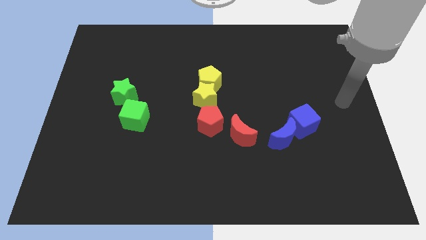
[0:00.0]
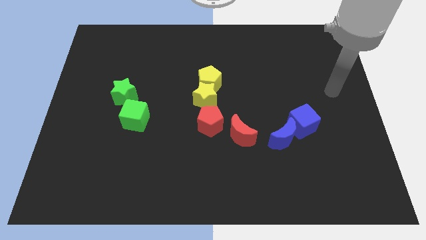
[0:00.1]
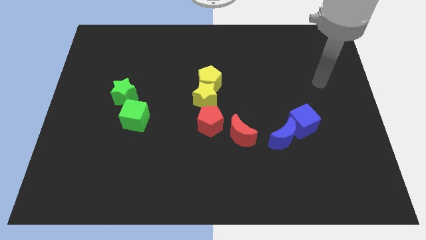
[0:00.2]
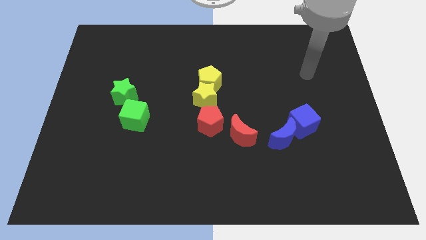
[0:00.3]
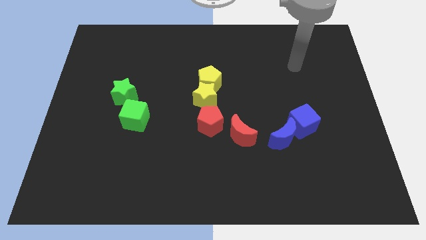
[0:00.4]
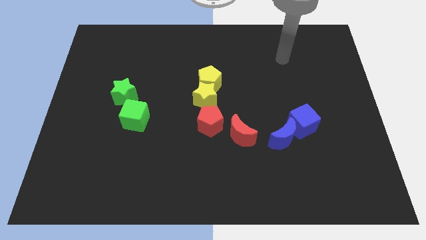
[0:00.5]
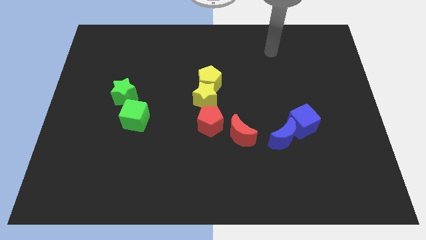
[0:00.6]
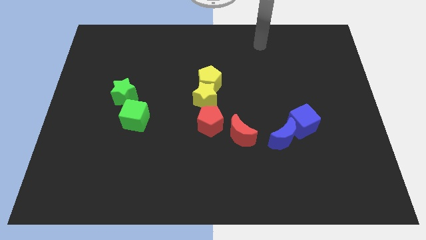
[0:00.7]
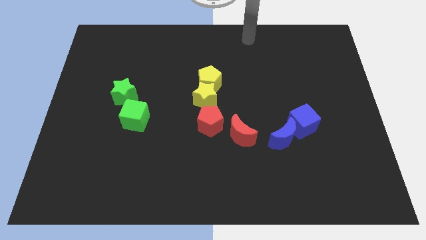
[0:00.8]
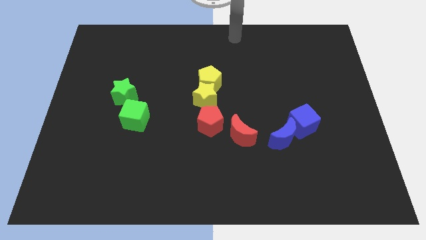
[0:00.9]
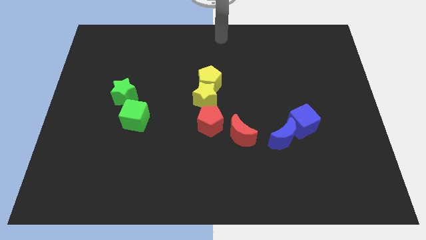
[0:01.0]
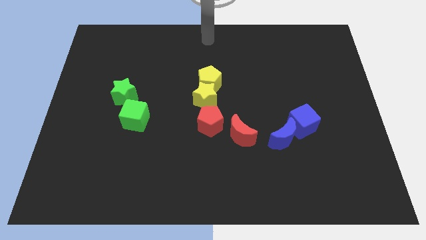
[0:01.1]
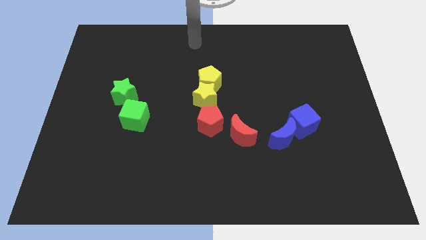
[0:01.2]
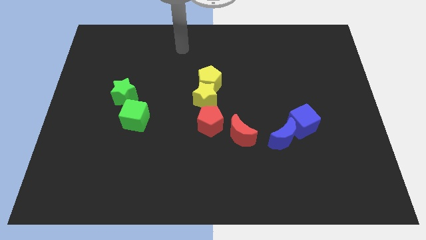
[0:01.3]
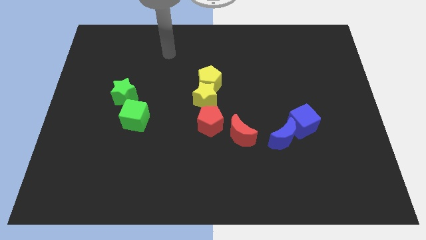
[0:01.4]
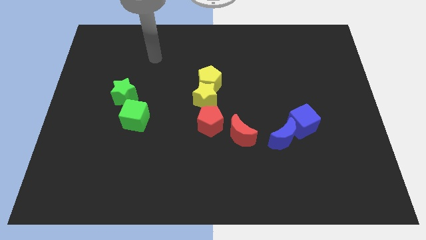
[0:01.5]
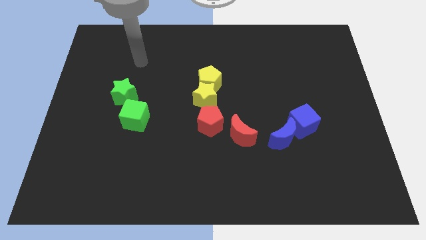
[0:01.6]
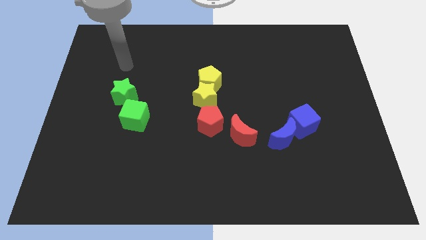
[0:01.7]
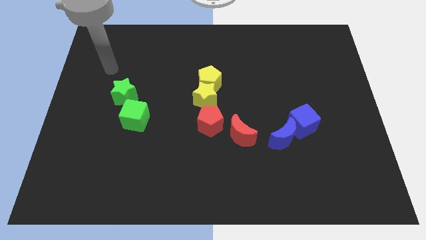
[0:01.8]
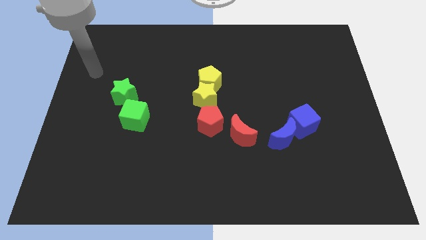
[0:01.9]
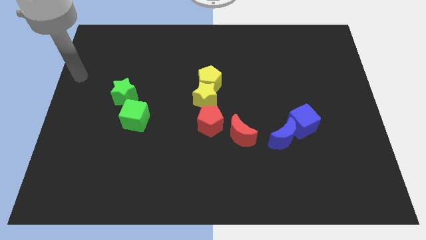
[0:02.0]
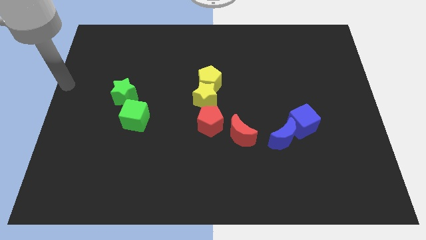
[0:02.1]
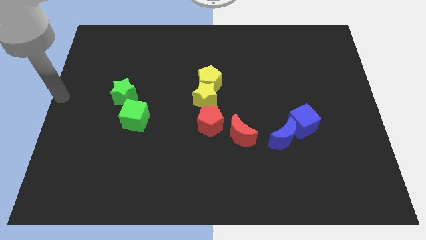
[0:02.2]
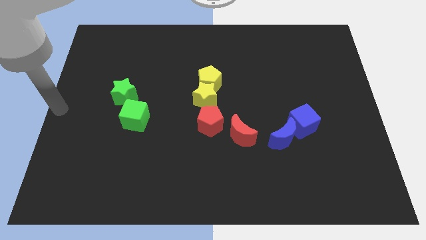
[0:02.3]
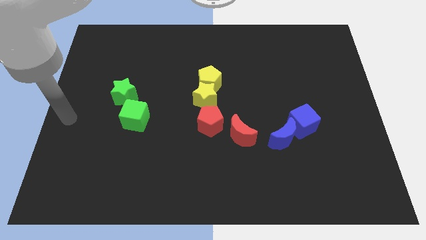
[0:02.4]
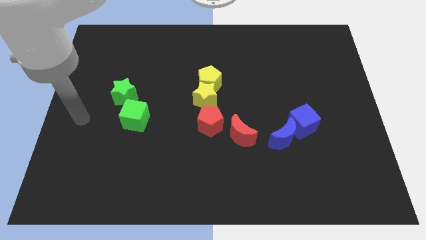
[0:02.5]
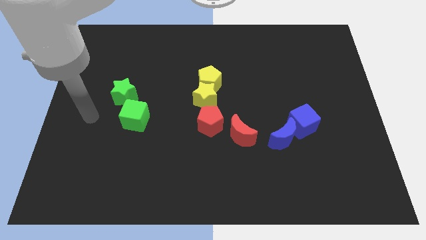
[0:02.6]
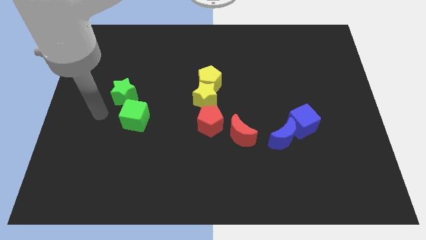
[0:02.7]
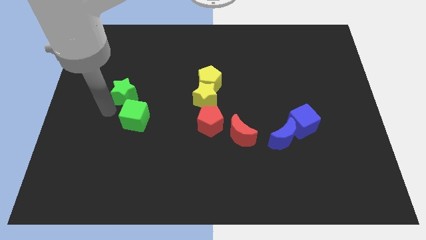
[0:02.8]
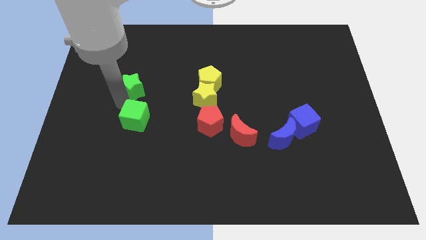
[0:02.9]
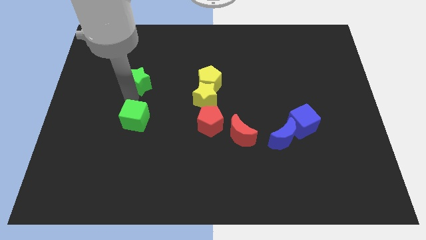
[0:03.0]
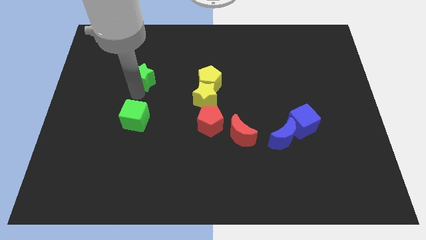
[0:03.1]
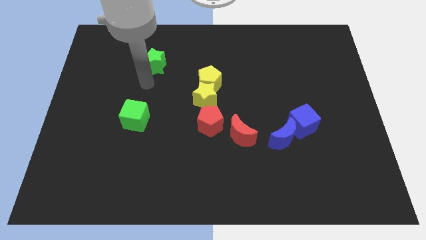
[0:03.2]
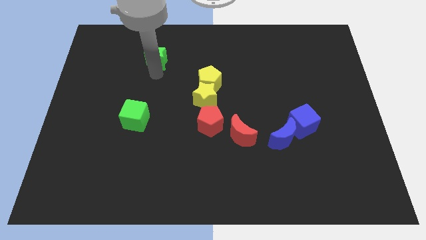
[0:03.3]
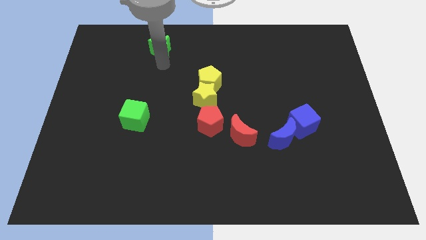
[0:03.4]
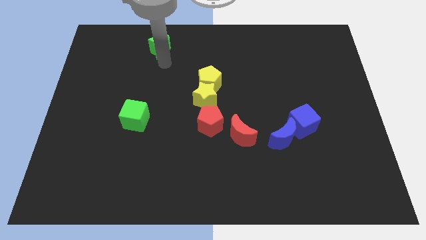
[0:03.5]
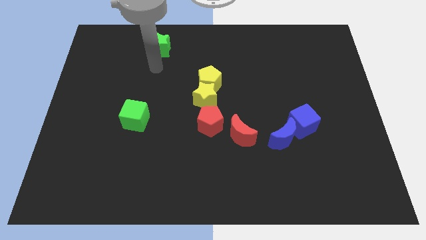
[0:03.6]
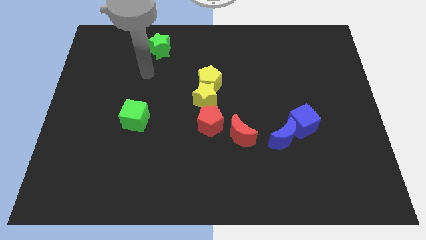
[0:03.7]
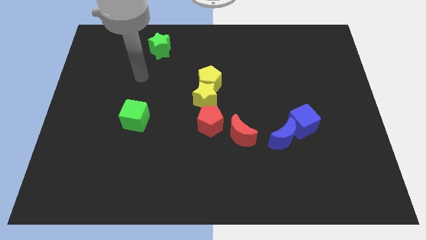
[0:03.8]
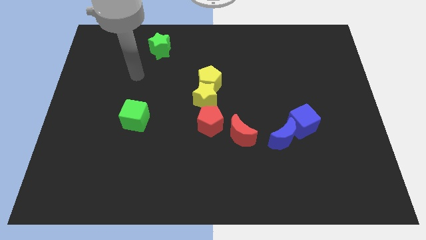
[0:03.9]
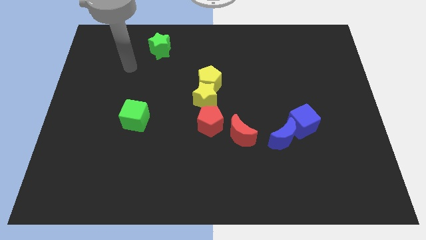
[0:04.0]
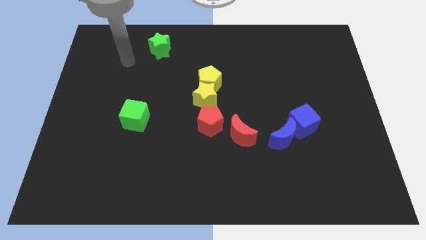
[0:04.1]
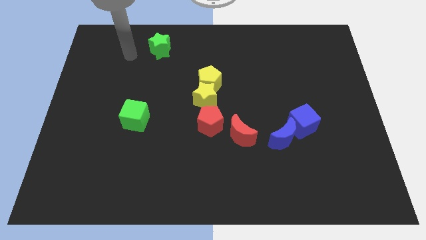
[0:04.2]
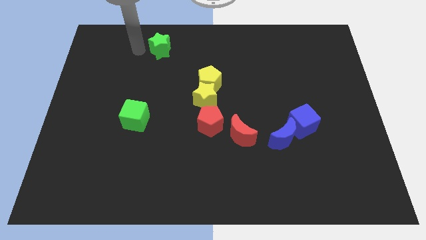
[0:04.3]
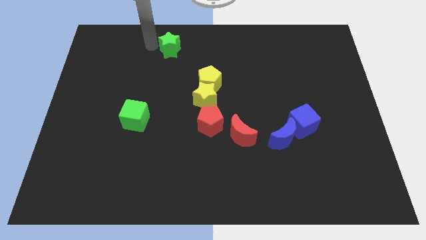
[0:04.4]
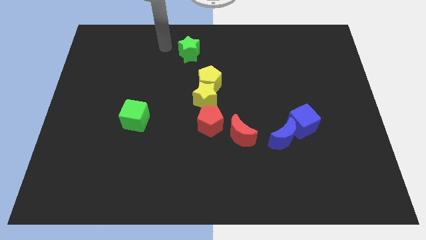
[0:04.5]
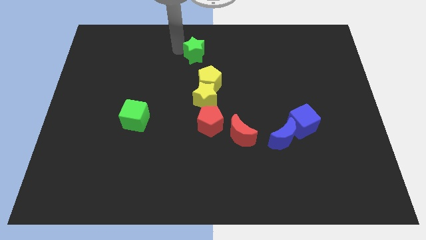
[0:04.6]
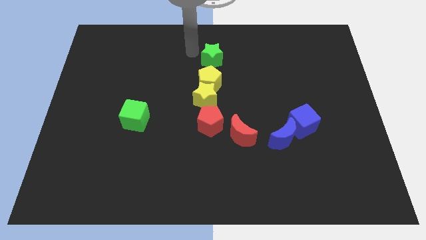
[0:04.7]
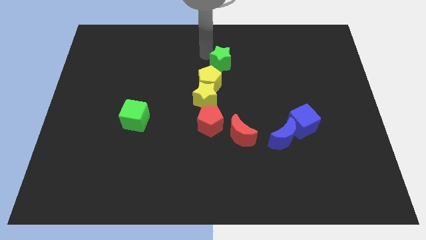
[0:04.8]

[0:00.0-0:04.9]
move the green star to the top of the yellow pentagon

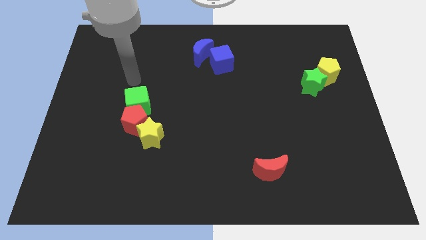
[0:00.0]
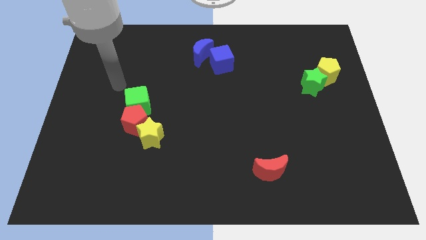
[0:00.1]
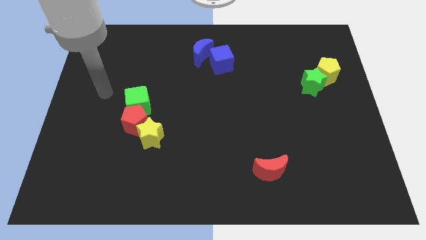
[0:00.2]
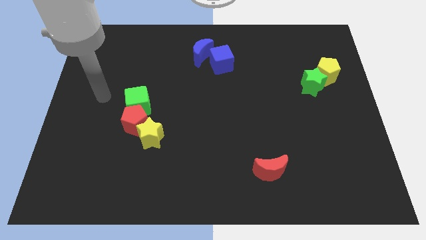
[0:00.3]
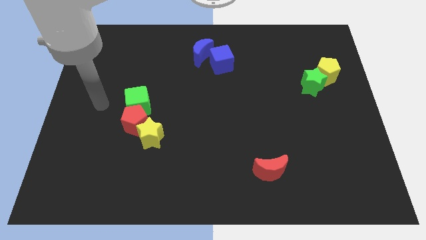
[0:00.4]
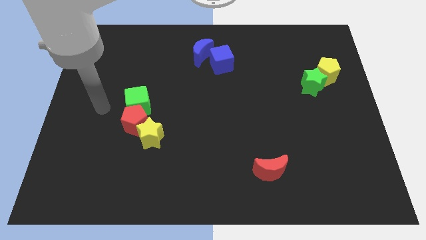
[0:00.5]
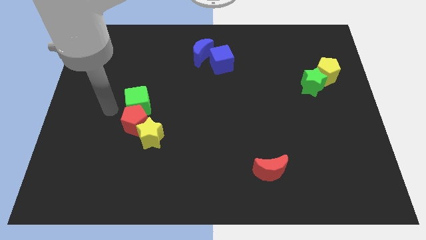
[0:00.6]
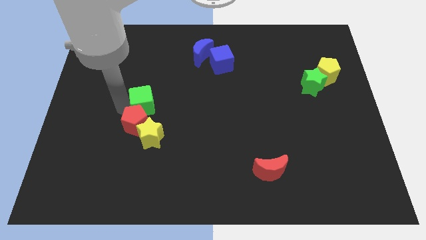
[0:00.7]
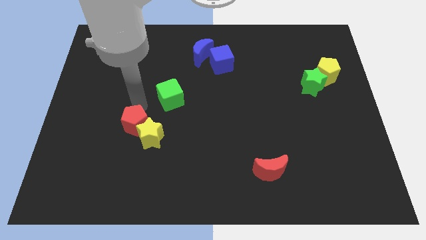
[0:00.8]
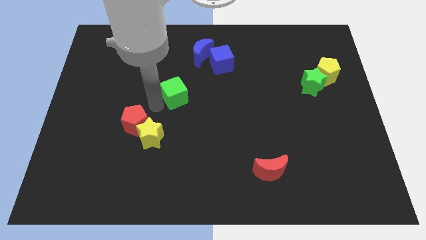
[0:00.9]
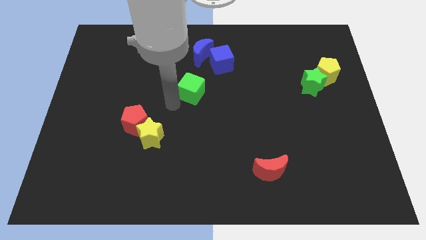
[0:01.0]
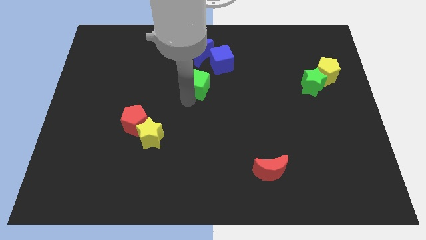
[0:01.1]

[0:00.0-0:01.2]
separate the green cube from the red pentagon

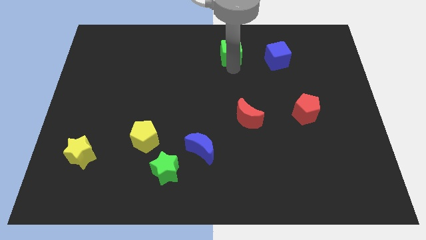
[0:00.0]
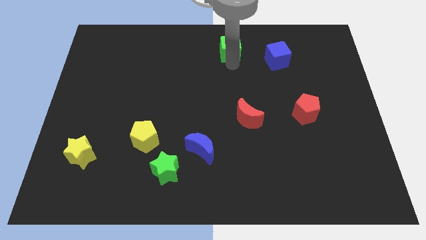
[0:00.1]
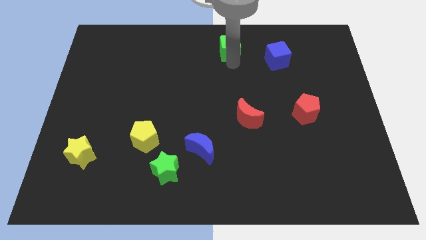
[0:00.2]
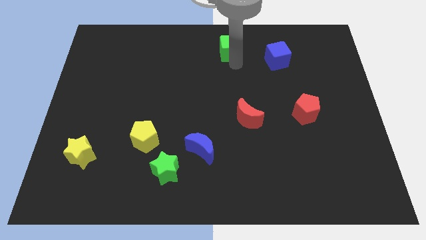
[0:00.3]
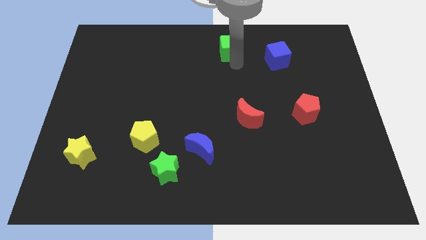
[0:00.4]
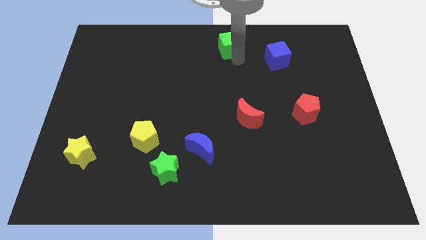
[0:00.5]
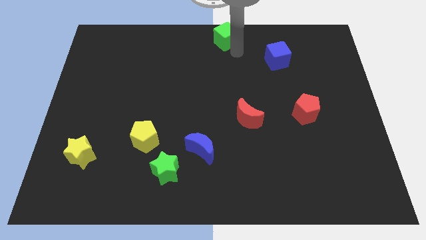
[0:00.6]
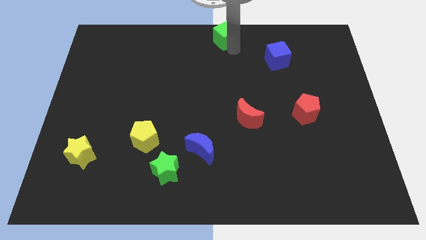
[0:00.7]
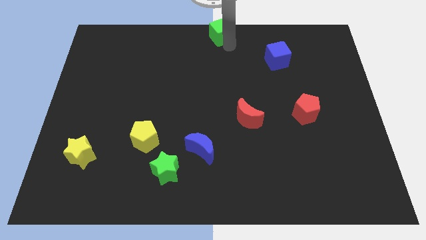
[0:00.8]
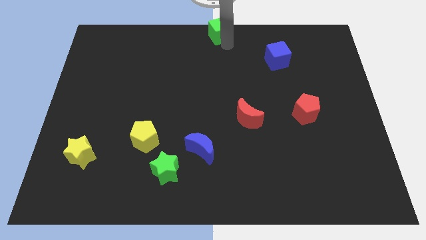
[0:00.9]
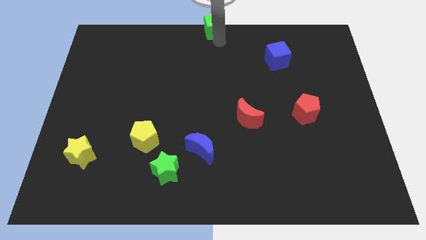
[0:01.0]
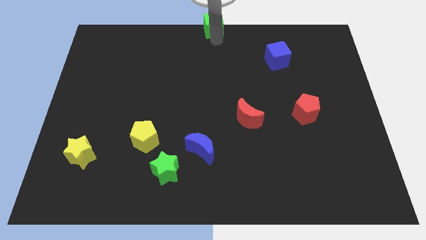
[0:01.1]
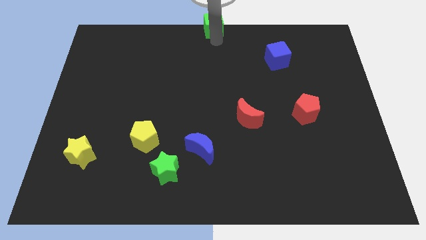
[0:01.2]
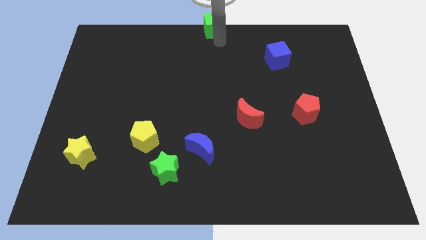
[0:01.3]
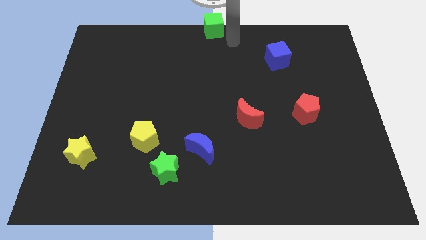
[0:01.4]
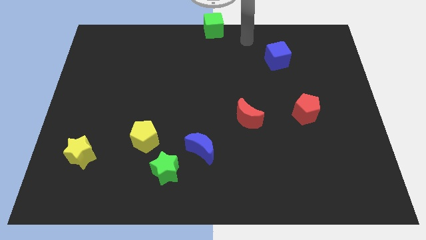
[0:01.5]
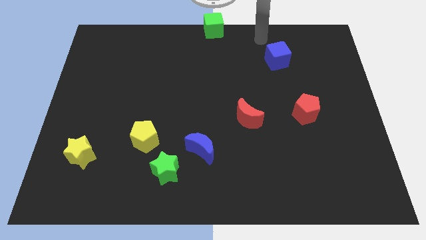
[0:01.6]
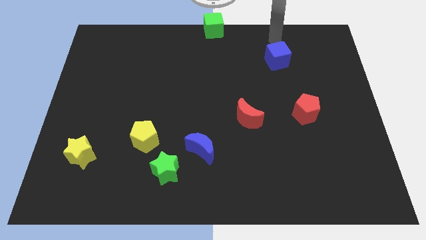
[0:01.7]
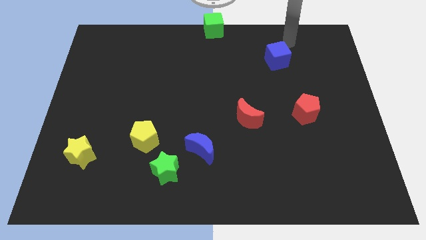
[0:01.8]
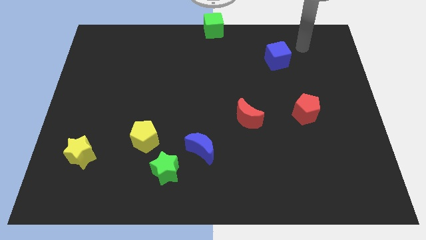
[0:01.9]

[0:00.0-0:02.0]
place the green cube at the top center

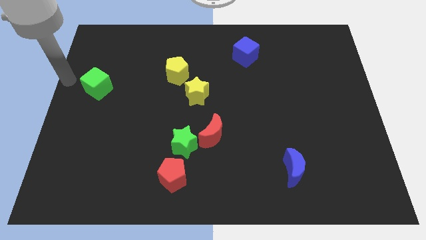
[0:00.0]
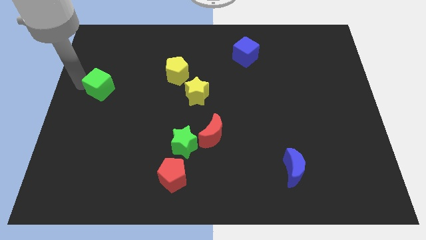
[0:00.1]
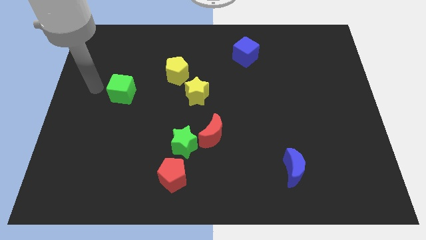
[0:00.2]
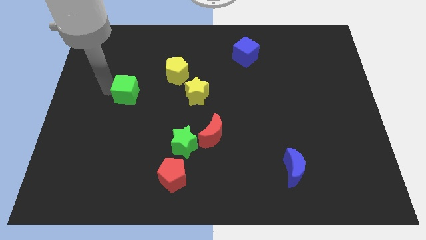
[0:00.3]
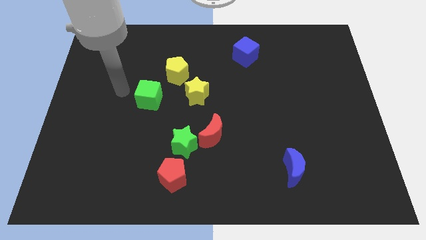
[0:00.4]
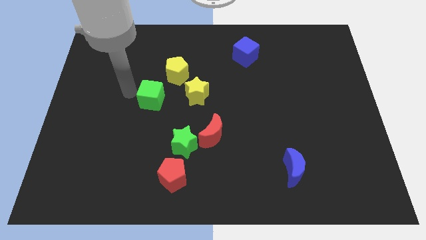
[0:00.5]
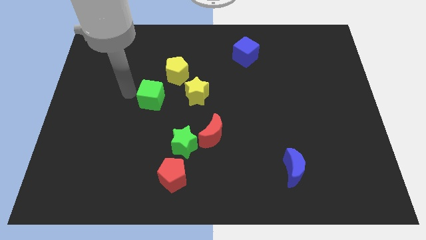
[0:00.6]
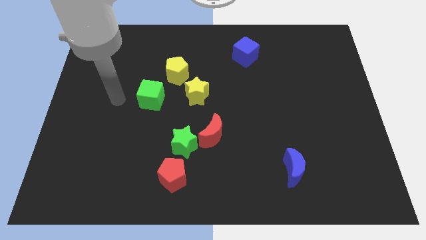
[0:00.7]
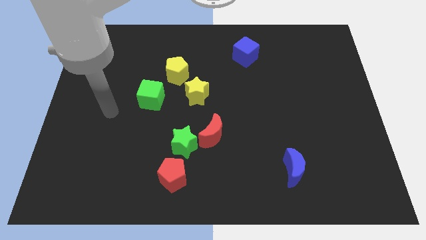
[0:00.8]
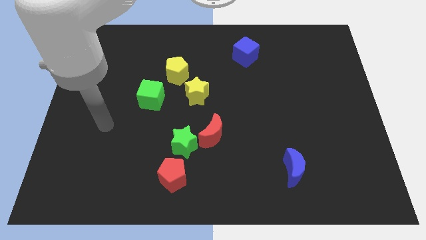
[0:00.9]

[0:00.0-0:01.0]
put the green cube to the left of the yellow star

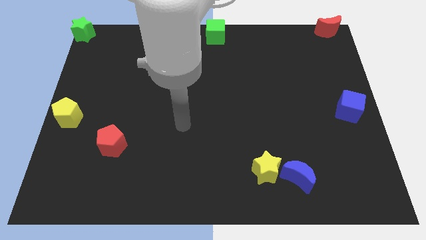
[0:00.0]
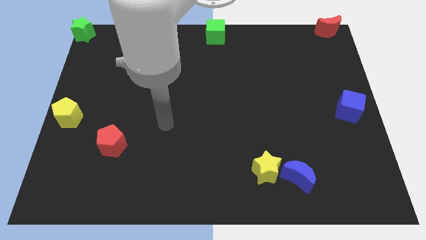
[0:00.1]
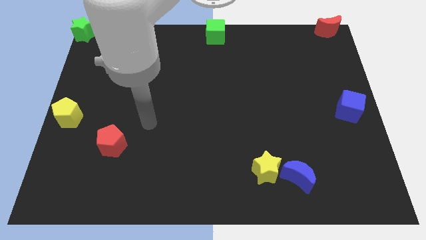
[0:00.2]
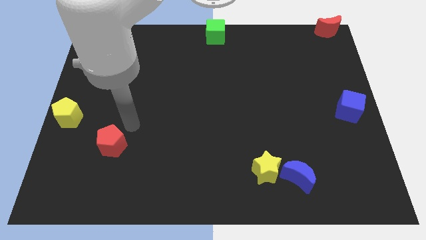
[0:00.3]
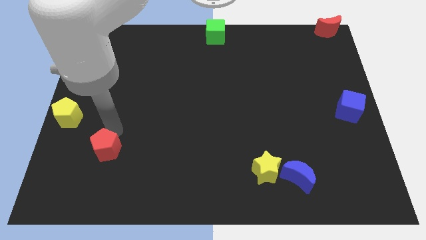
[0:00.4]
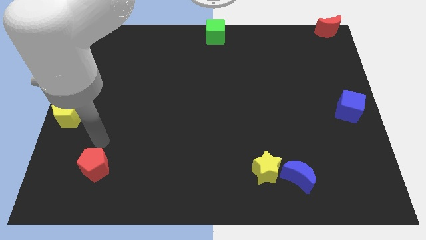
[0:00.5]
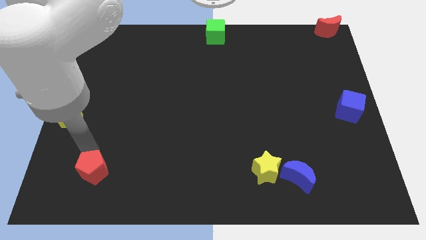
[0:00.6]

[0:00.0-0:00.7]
point your arm above red pentagon
